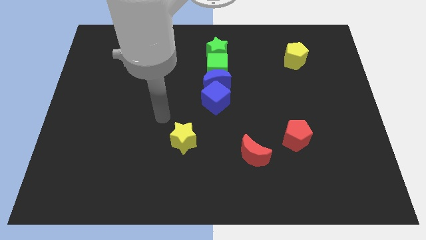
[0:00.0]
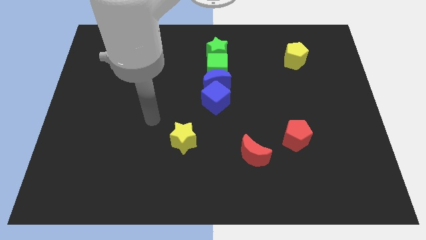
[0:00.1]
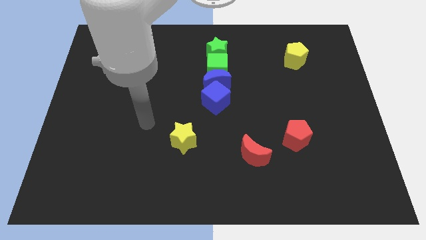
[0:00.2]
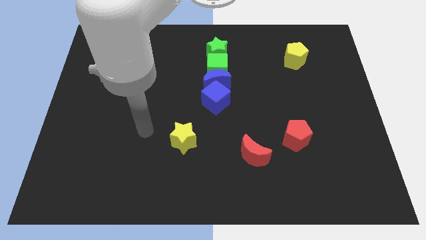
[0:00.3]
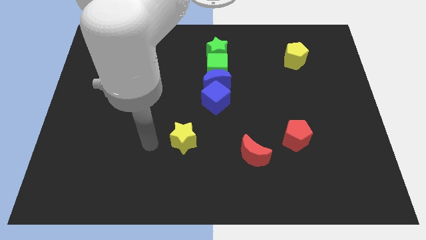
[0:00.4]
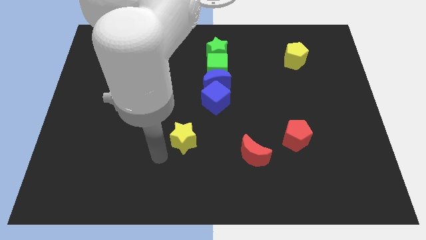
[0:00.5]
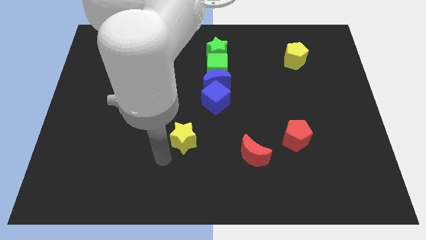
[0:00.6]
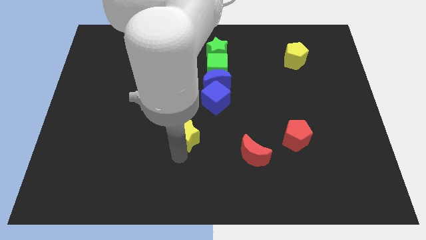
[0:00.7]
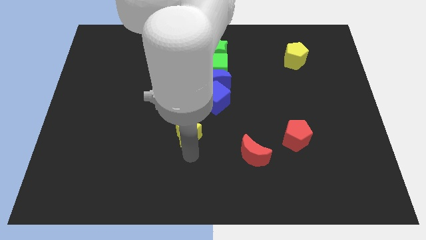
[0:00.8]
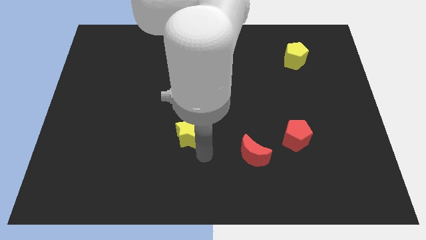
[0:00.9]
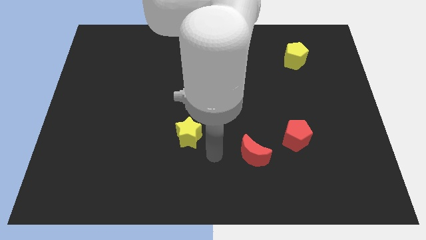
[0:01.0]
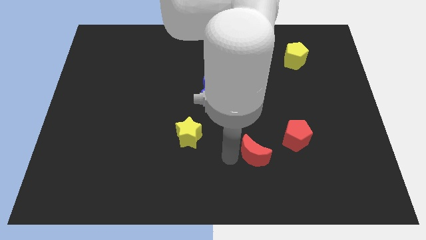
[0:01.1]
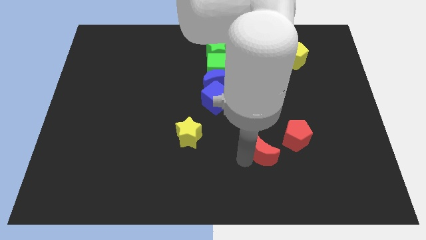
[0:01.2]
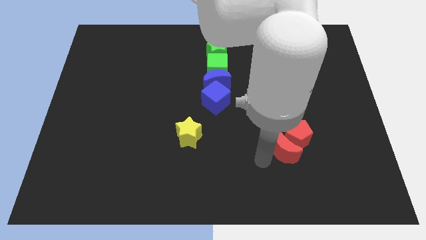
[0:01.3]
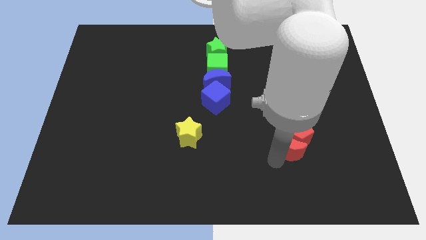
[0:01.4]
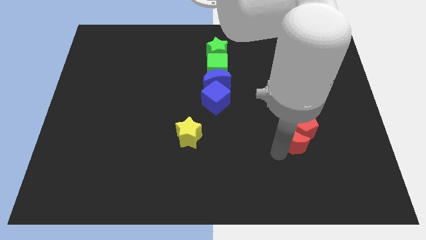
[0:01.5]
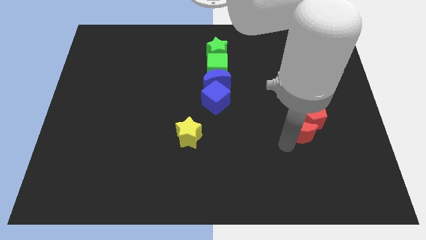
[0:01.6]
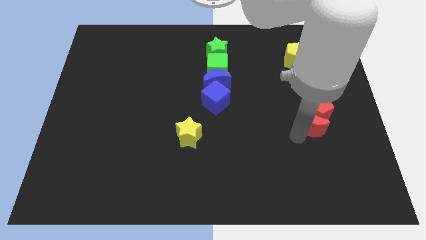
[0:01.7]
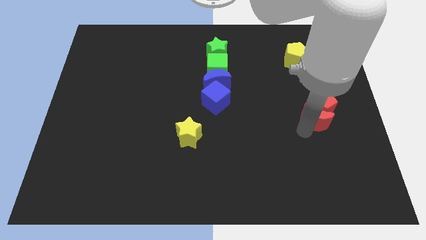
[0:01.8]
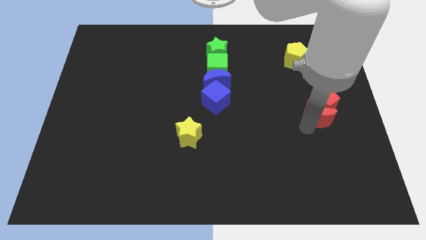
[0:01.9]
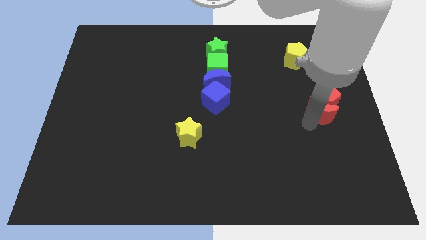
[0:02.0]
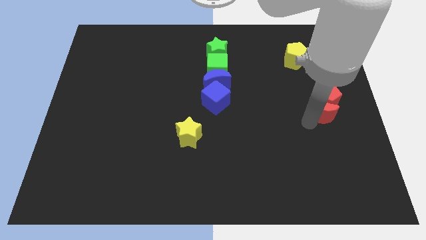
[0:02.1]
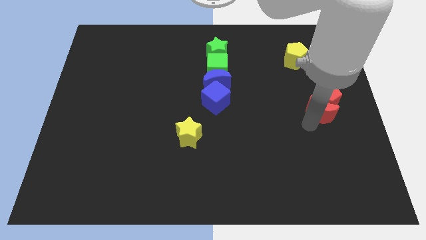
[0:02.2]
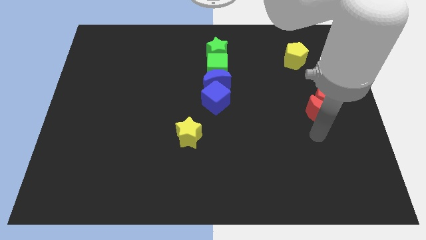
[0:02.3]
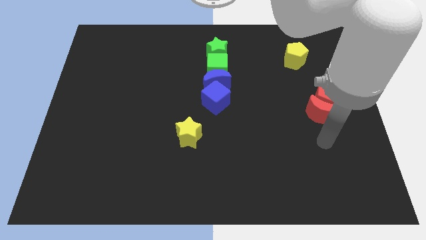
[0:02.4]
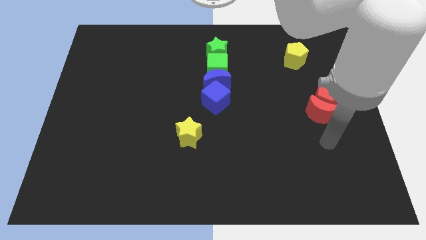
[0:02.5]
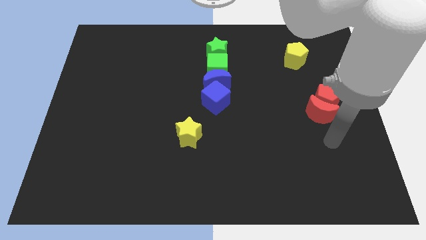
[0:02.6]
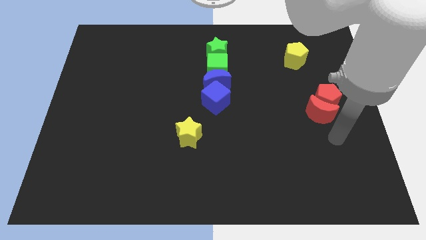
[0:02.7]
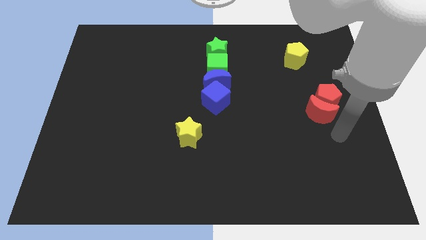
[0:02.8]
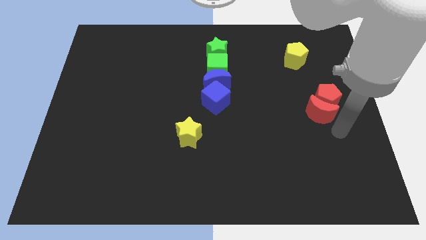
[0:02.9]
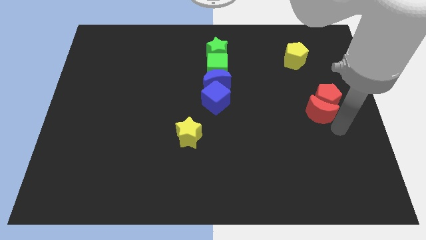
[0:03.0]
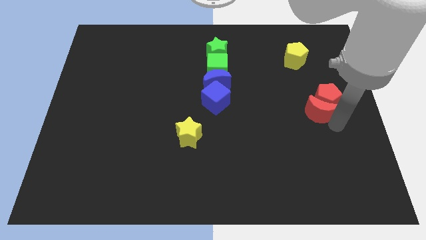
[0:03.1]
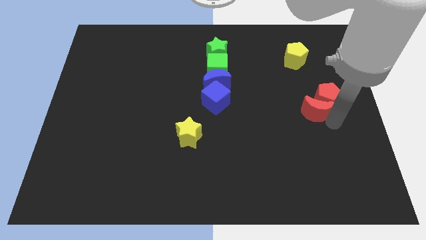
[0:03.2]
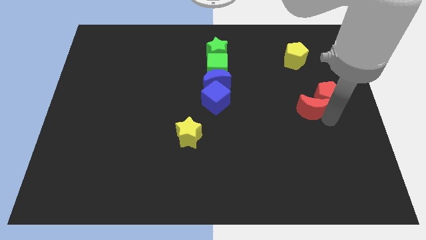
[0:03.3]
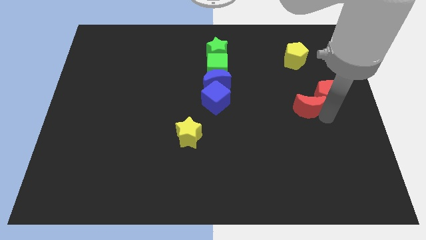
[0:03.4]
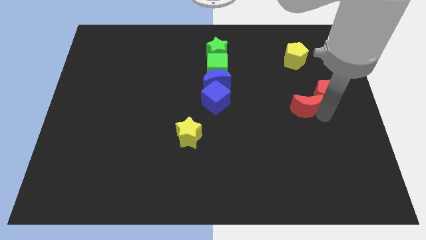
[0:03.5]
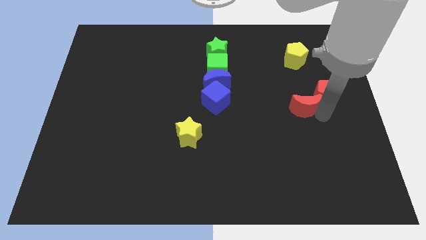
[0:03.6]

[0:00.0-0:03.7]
slide the red moon into the red pentagon

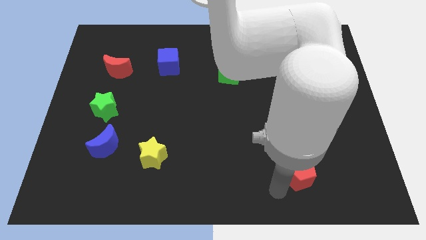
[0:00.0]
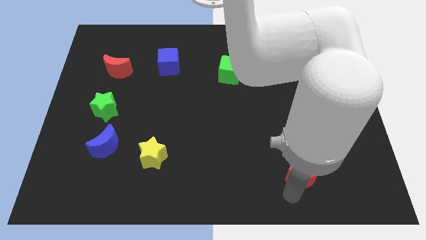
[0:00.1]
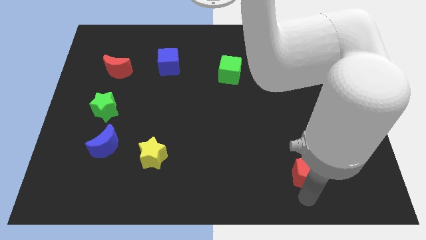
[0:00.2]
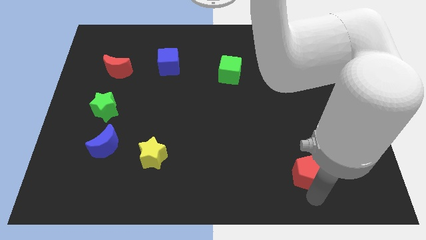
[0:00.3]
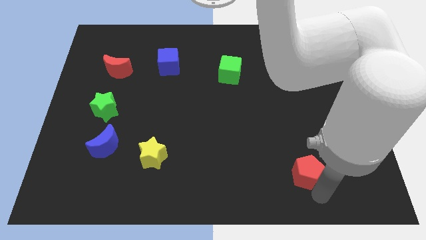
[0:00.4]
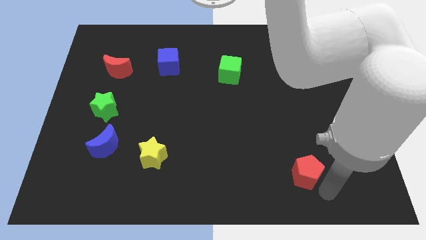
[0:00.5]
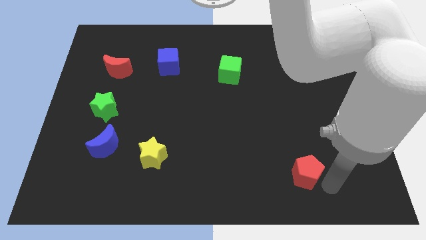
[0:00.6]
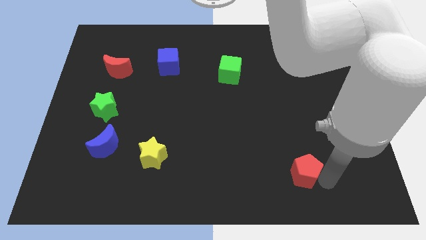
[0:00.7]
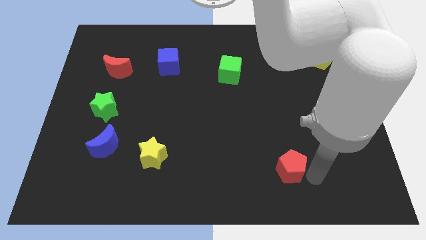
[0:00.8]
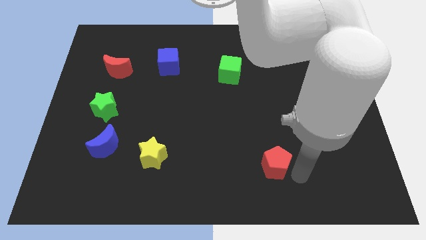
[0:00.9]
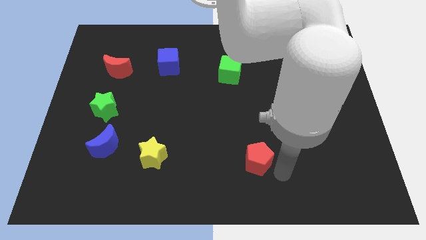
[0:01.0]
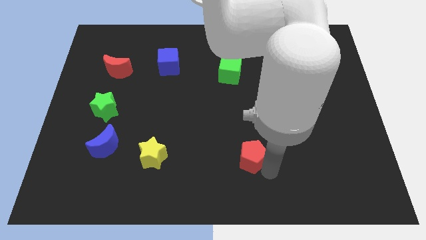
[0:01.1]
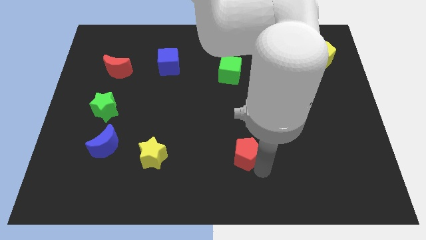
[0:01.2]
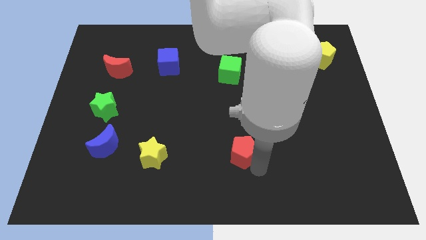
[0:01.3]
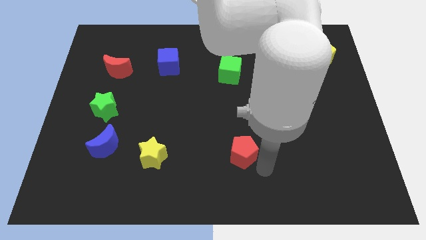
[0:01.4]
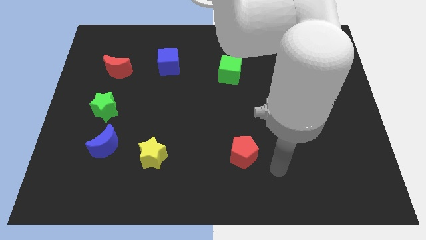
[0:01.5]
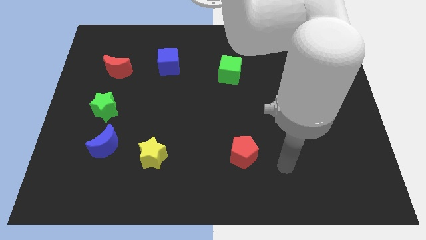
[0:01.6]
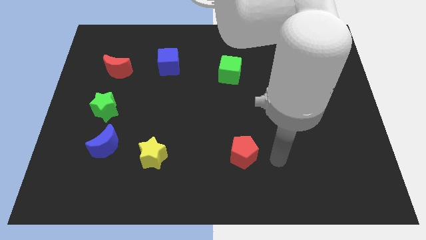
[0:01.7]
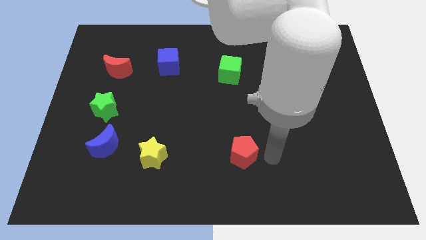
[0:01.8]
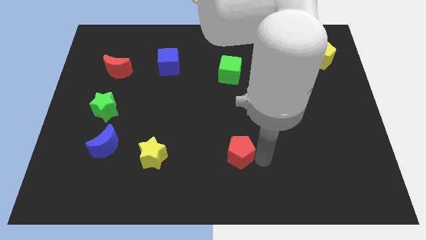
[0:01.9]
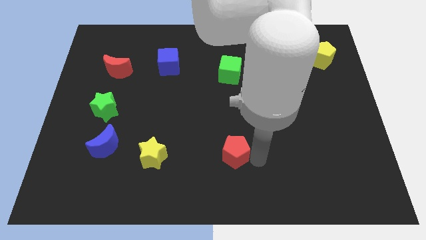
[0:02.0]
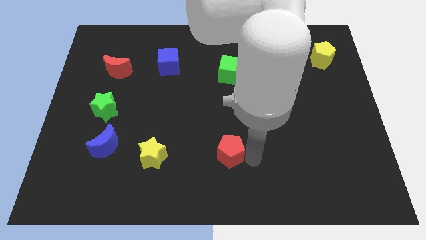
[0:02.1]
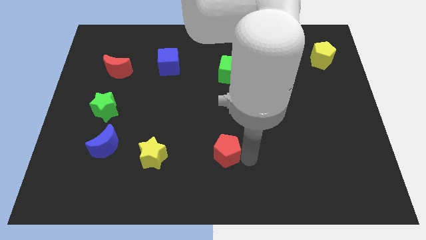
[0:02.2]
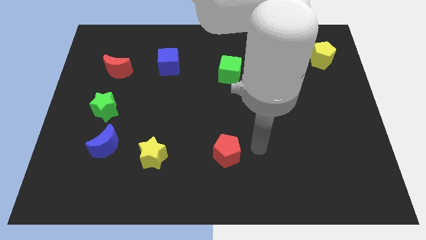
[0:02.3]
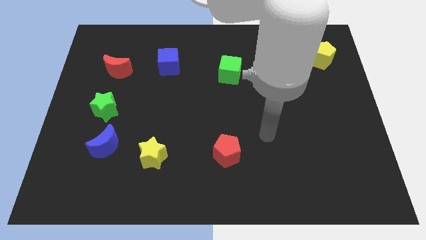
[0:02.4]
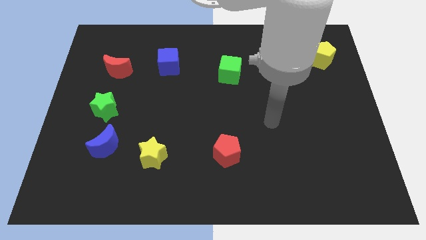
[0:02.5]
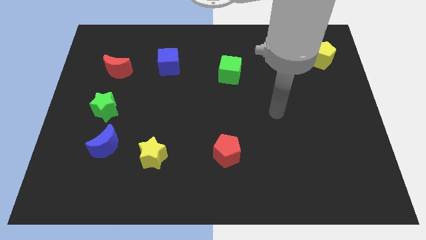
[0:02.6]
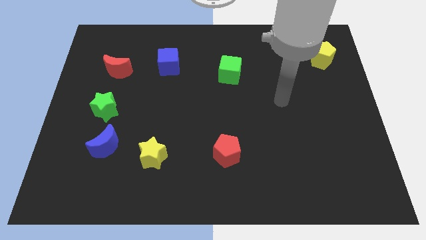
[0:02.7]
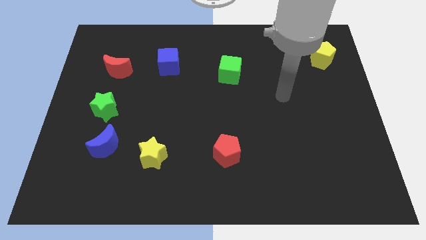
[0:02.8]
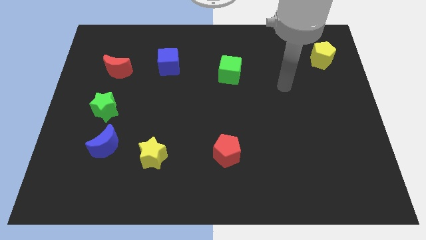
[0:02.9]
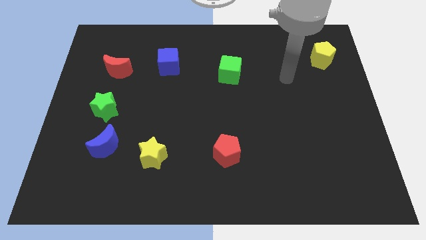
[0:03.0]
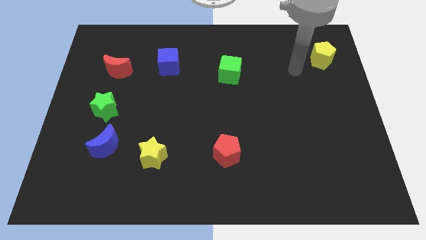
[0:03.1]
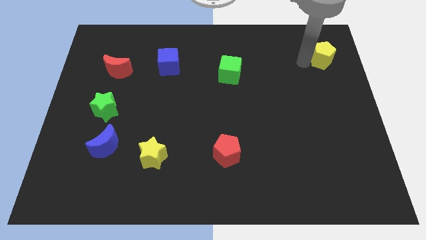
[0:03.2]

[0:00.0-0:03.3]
place red pentagon right of yellow star

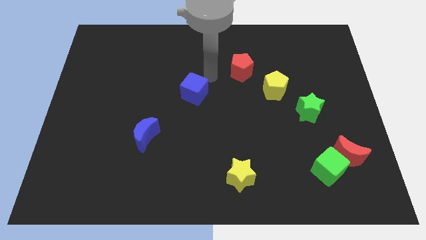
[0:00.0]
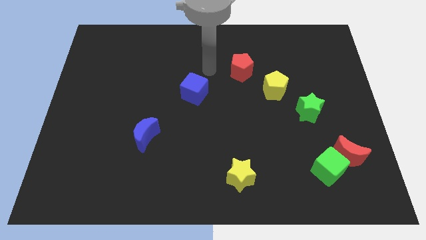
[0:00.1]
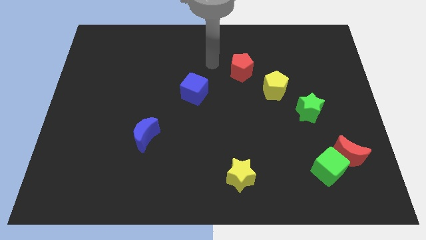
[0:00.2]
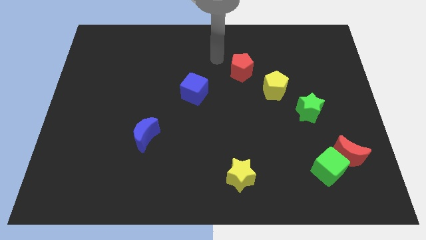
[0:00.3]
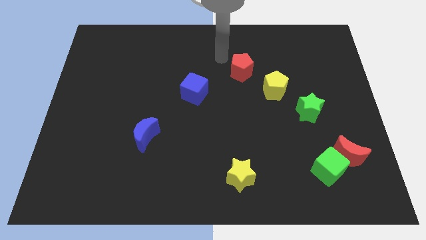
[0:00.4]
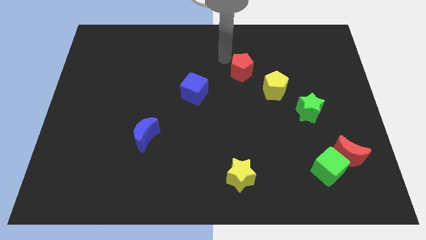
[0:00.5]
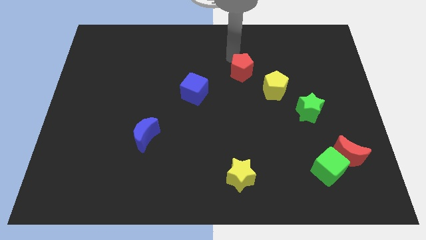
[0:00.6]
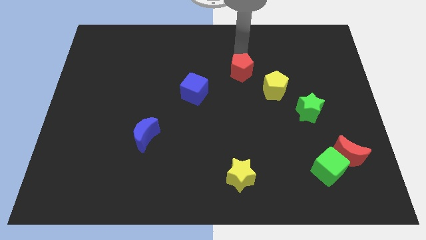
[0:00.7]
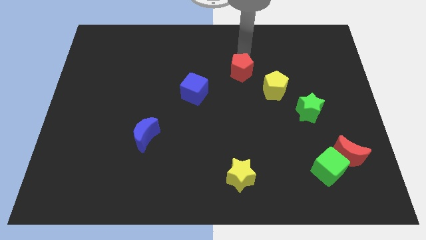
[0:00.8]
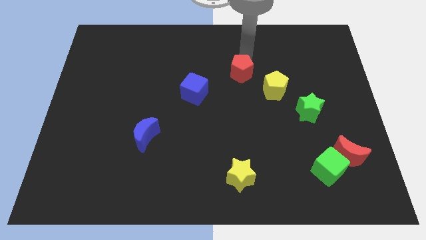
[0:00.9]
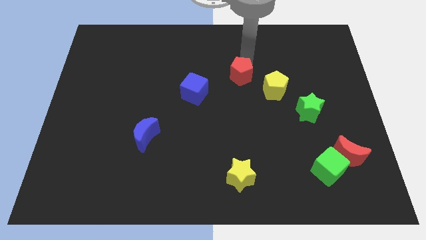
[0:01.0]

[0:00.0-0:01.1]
touch the red pentagon

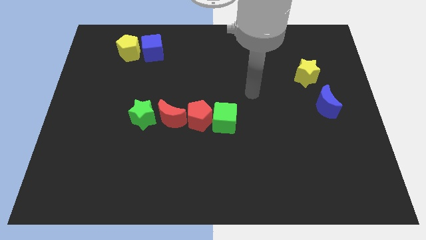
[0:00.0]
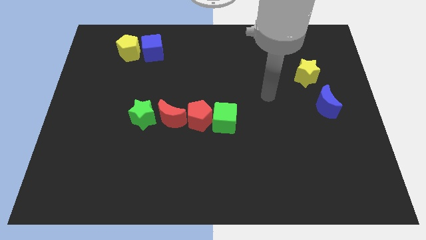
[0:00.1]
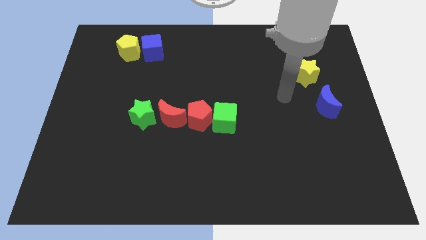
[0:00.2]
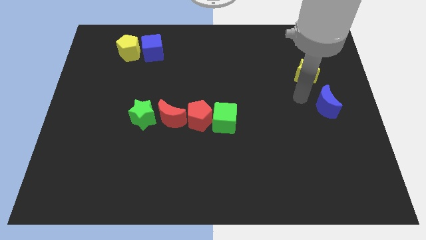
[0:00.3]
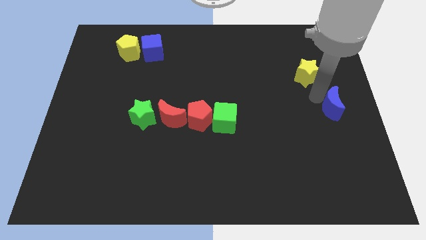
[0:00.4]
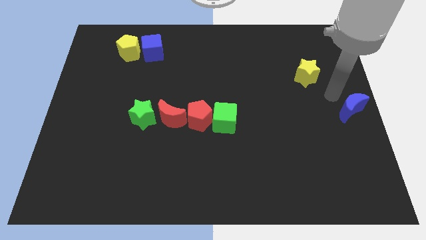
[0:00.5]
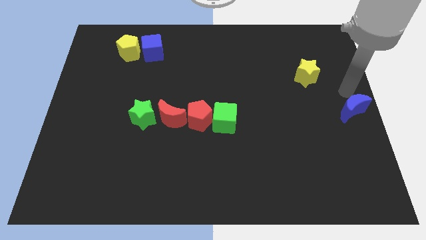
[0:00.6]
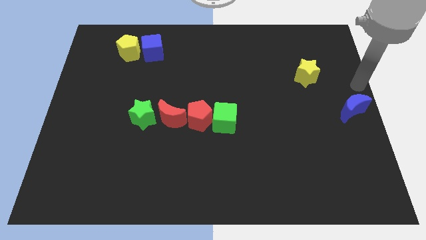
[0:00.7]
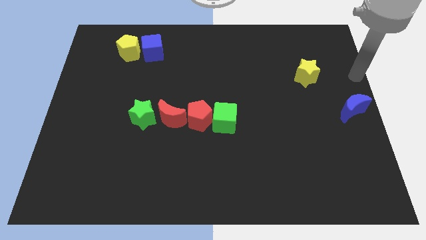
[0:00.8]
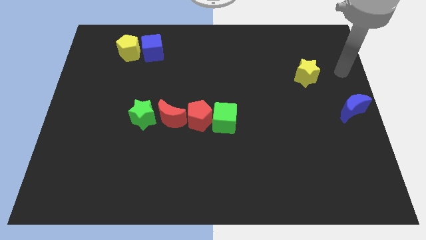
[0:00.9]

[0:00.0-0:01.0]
push the blue moon to the right side of the board
